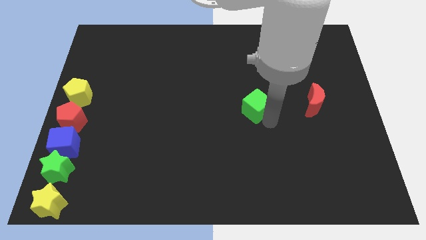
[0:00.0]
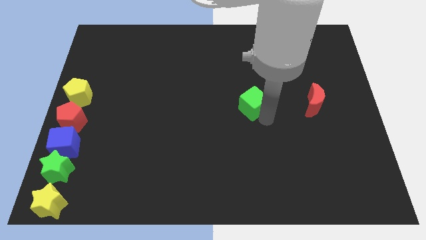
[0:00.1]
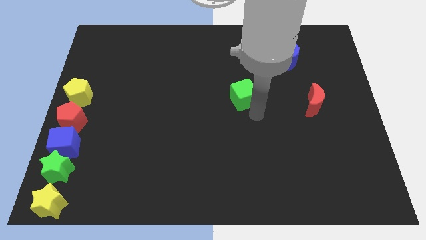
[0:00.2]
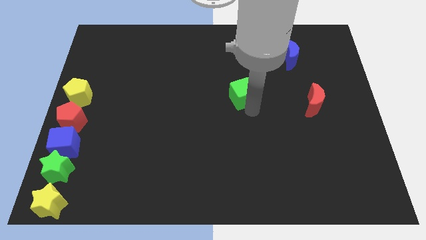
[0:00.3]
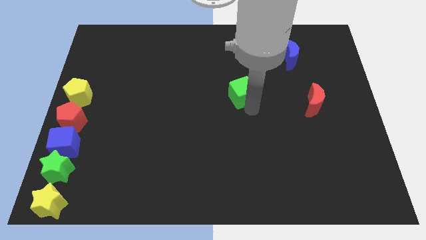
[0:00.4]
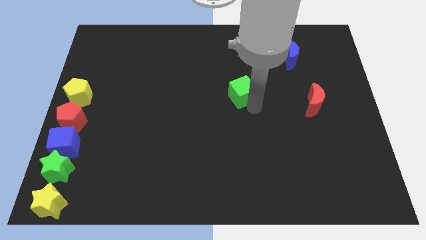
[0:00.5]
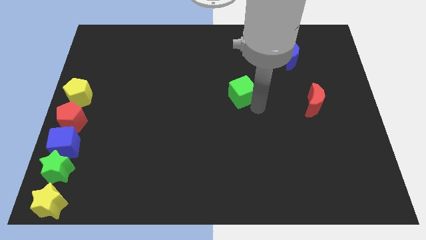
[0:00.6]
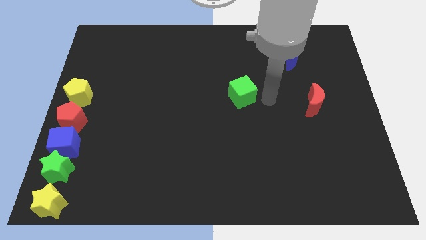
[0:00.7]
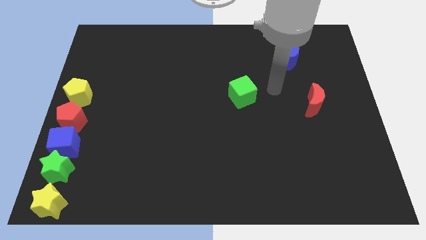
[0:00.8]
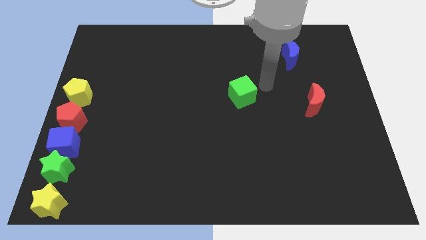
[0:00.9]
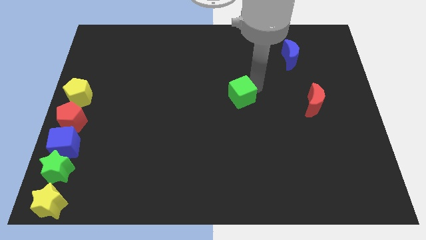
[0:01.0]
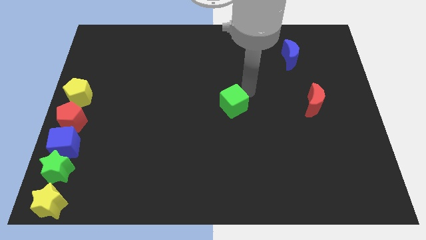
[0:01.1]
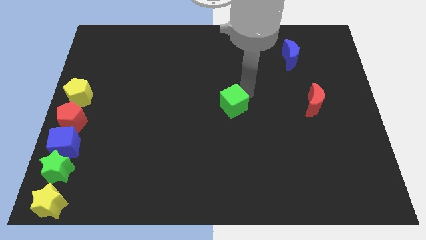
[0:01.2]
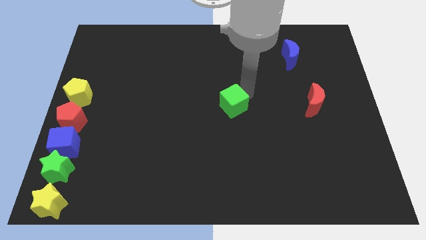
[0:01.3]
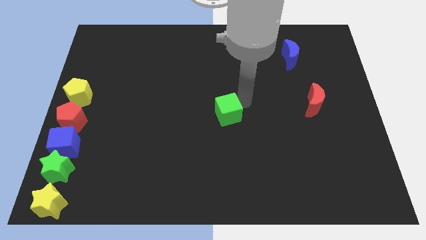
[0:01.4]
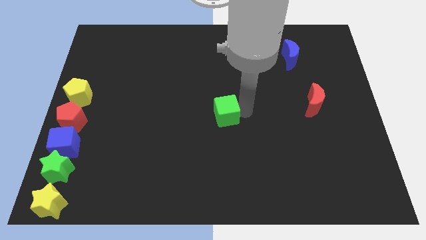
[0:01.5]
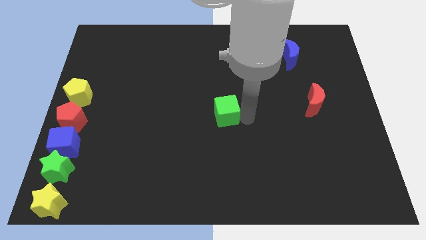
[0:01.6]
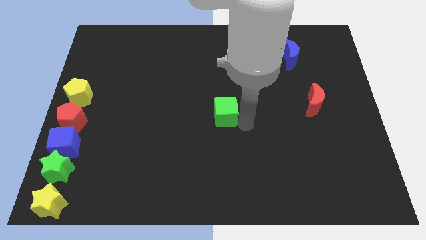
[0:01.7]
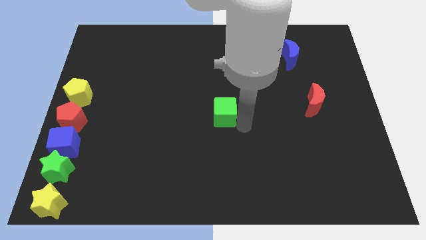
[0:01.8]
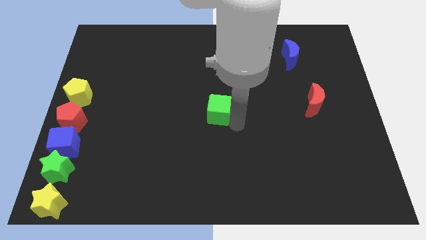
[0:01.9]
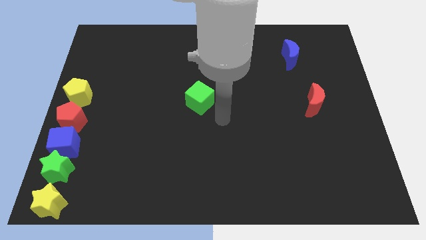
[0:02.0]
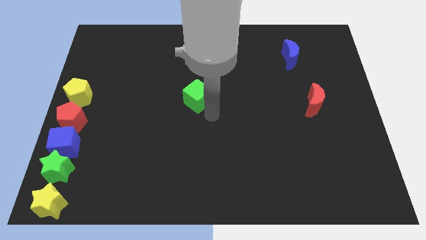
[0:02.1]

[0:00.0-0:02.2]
slide green cube to the center

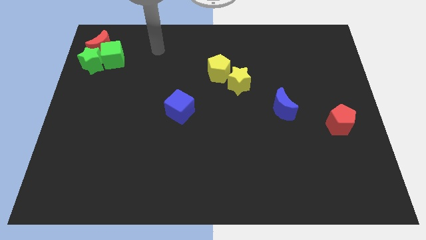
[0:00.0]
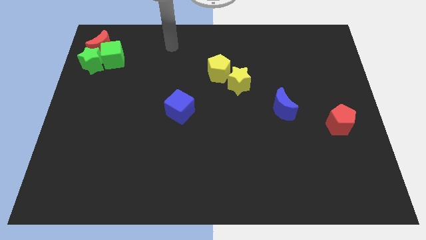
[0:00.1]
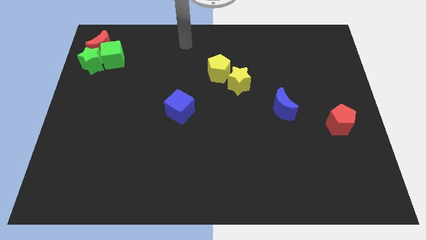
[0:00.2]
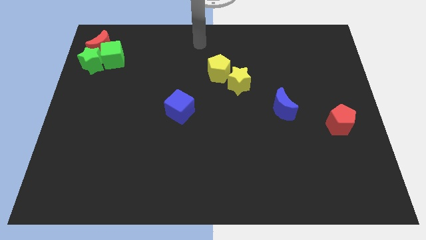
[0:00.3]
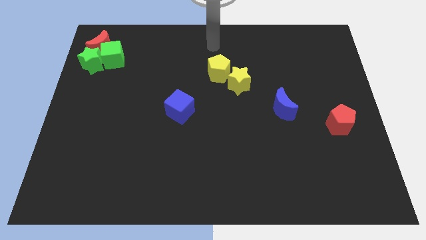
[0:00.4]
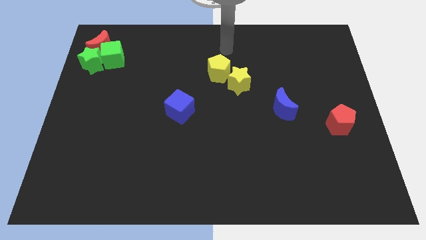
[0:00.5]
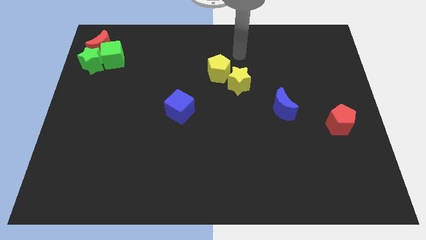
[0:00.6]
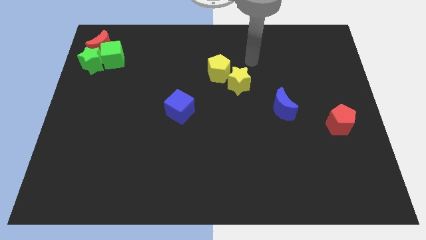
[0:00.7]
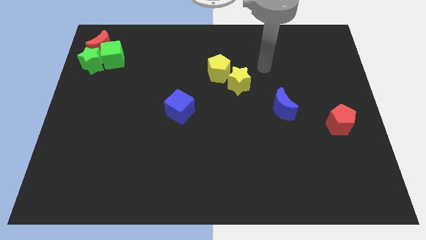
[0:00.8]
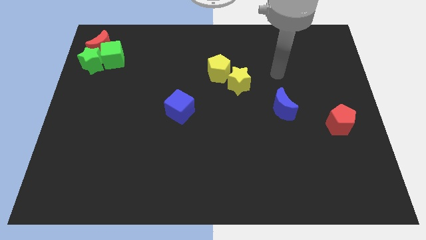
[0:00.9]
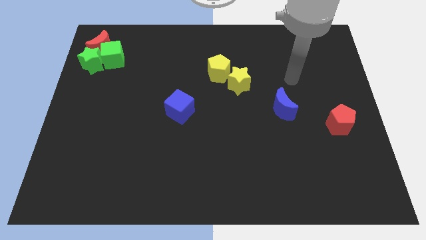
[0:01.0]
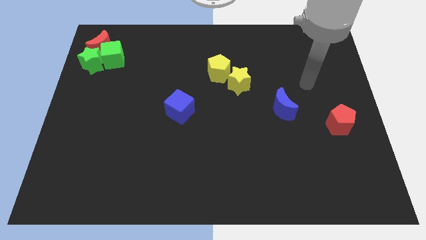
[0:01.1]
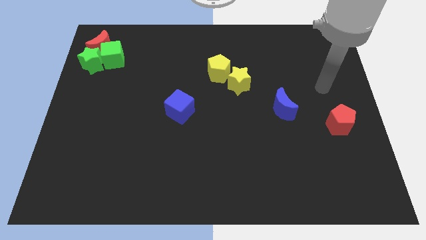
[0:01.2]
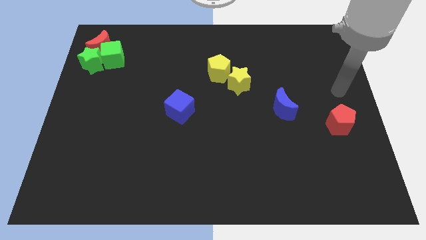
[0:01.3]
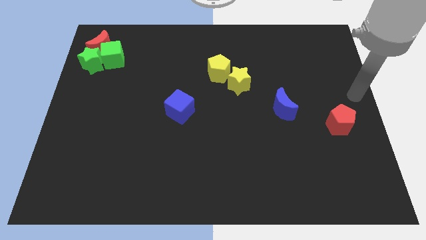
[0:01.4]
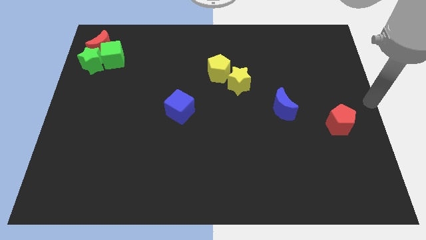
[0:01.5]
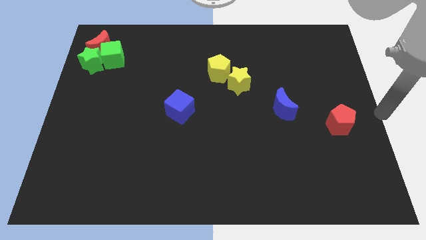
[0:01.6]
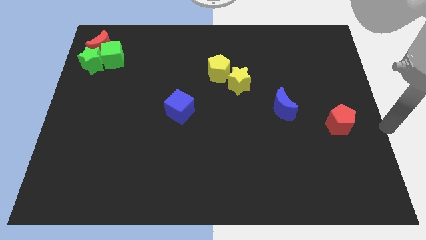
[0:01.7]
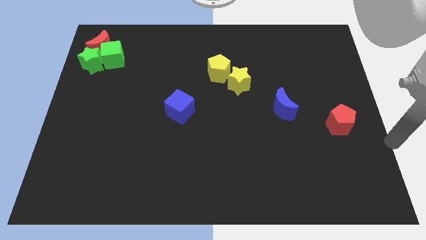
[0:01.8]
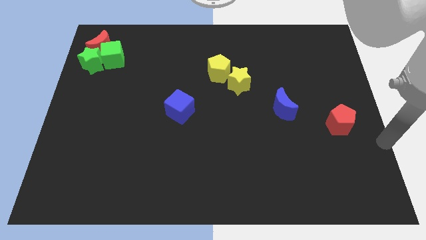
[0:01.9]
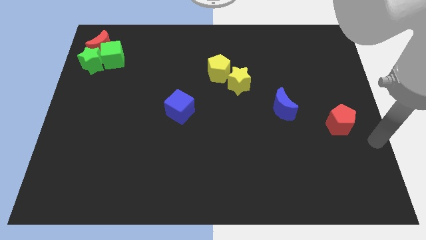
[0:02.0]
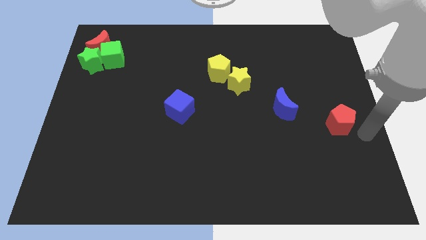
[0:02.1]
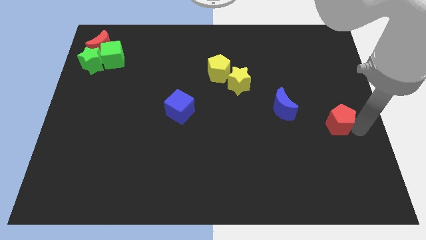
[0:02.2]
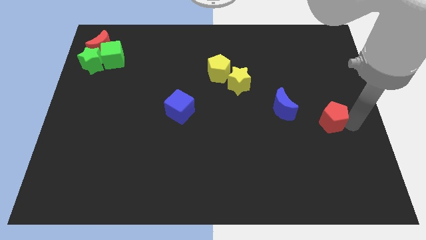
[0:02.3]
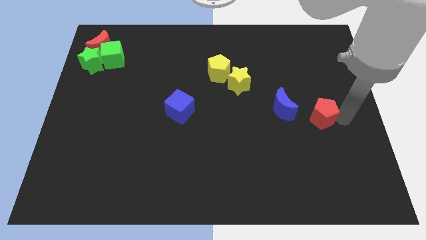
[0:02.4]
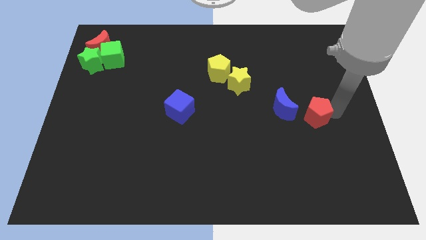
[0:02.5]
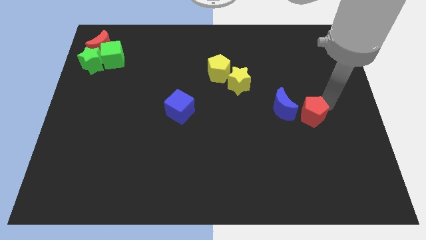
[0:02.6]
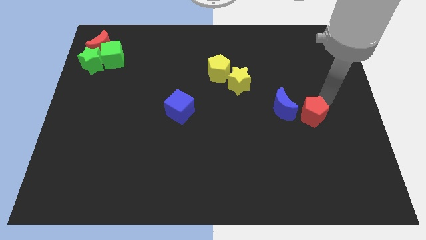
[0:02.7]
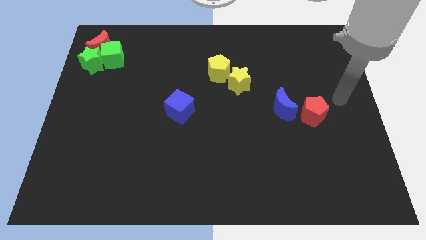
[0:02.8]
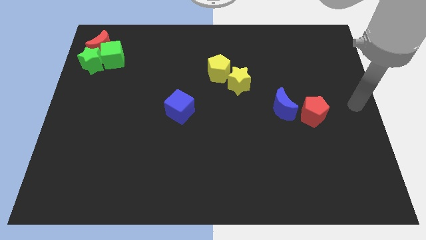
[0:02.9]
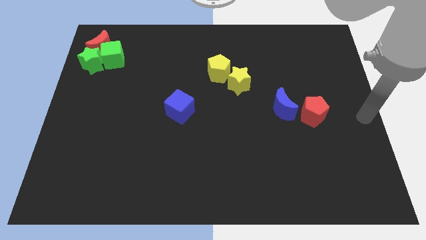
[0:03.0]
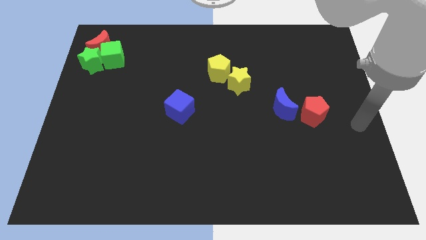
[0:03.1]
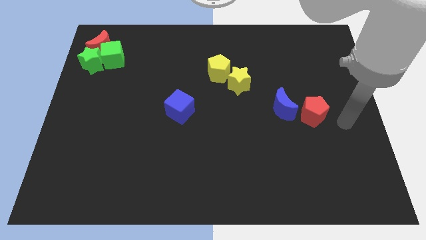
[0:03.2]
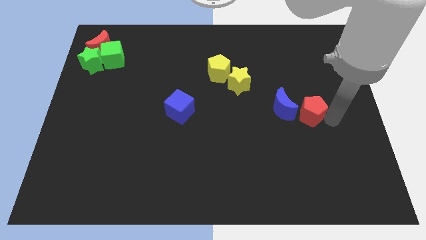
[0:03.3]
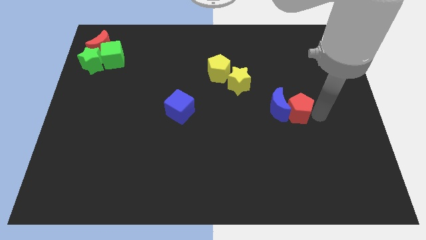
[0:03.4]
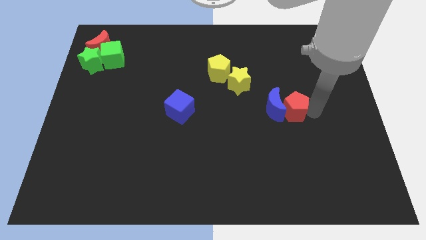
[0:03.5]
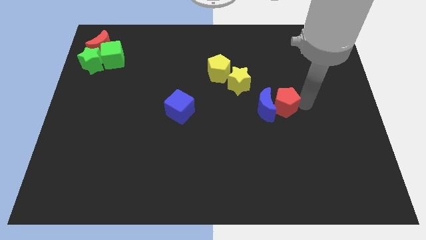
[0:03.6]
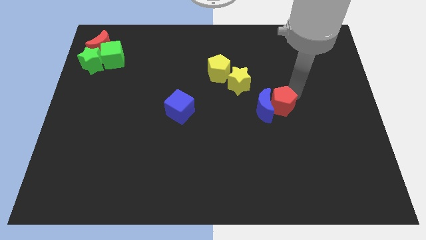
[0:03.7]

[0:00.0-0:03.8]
move the red penatgon into blue crescent to the right

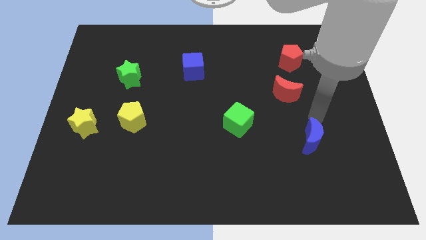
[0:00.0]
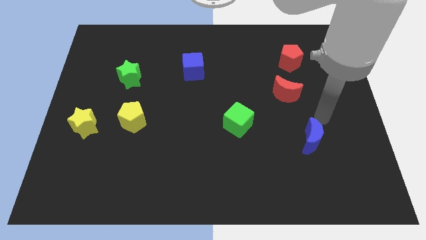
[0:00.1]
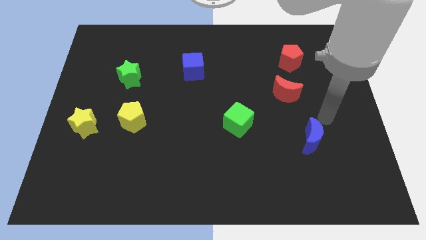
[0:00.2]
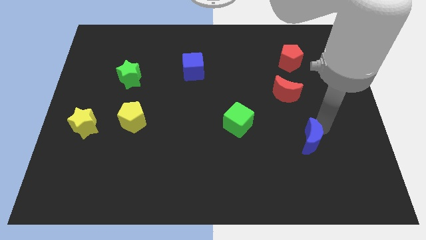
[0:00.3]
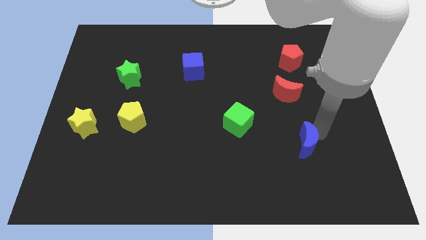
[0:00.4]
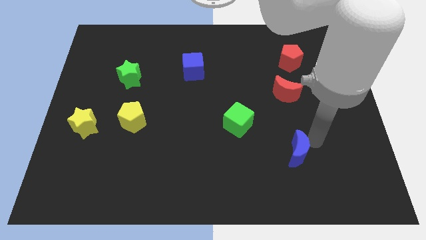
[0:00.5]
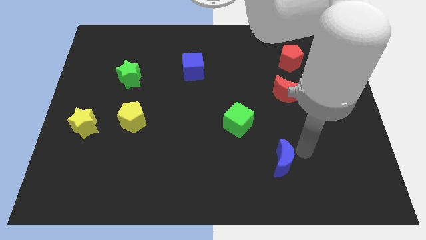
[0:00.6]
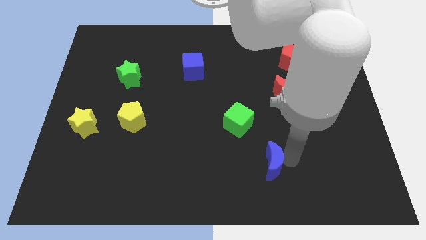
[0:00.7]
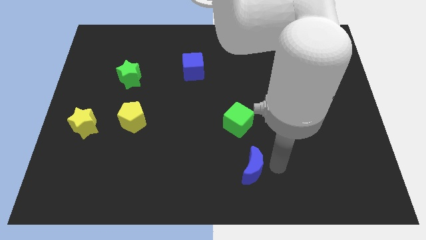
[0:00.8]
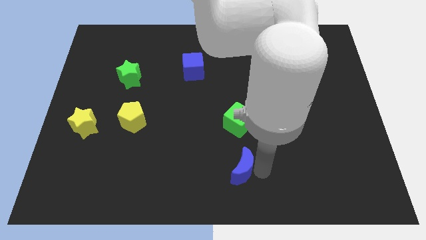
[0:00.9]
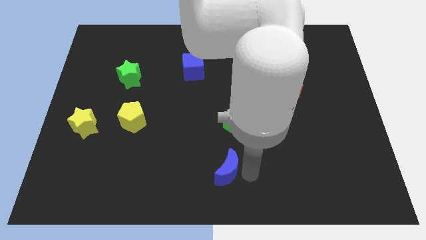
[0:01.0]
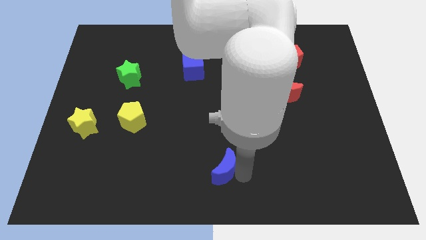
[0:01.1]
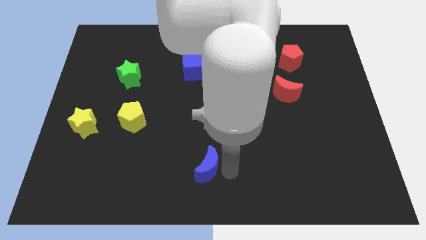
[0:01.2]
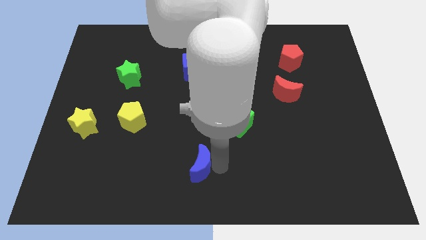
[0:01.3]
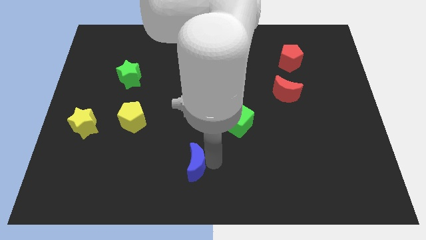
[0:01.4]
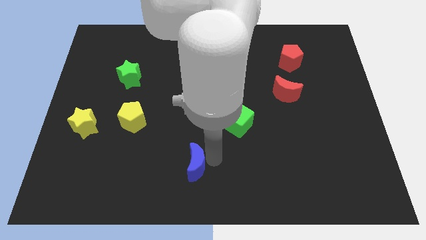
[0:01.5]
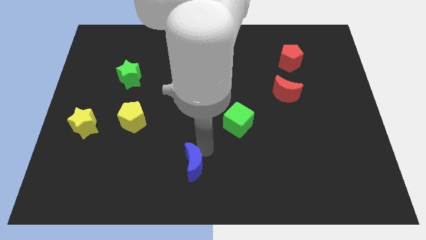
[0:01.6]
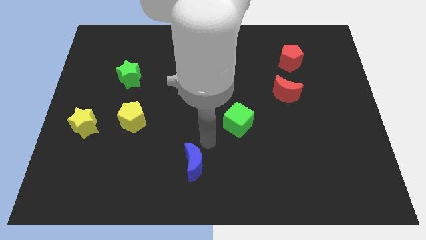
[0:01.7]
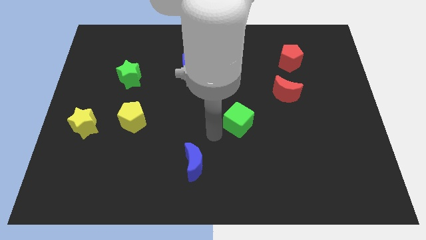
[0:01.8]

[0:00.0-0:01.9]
move the blue moon diagonally to the yellow pentagon

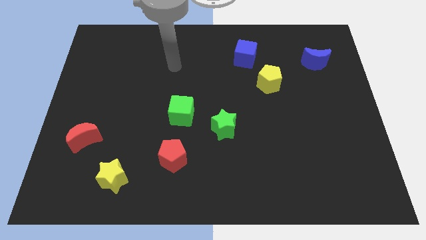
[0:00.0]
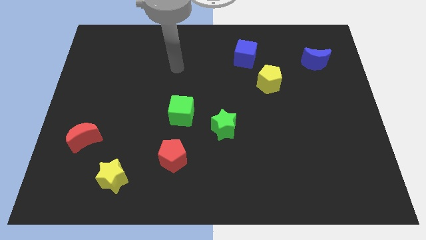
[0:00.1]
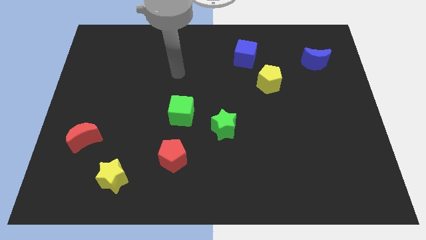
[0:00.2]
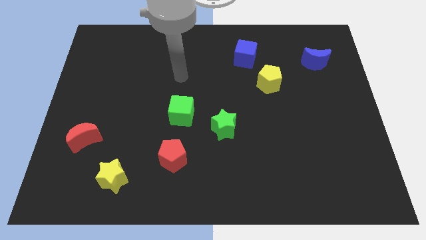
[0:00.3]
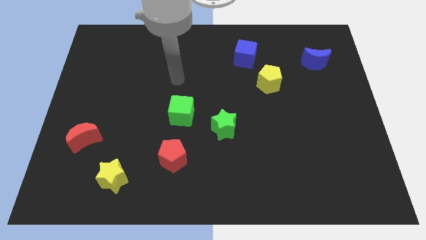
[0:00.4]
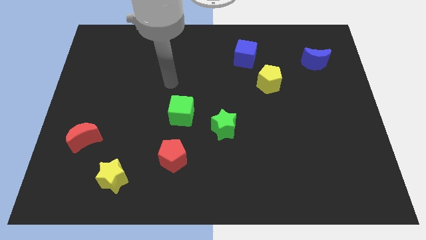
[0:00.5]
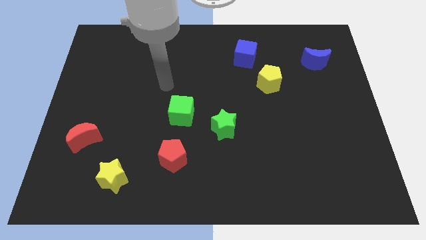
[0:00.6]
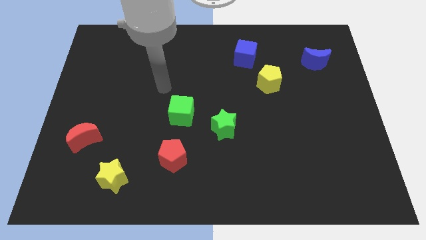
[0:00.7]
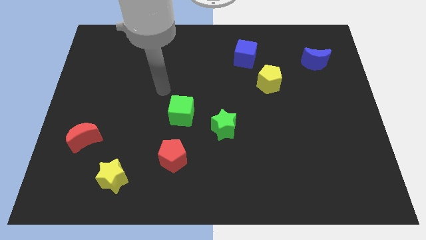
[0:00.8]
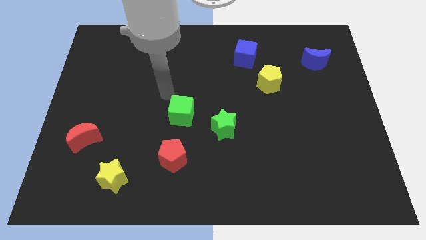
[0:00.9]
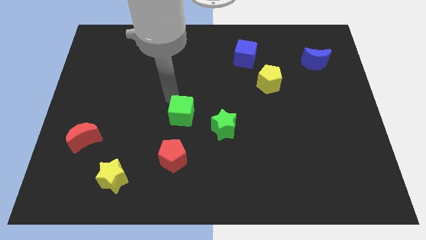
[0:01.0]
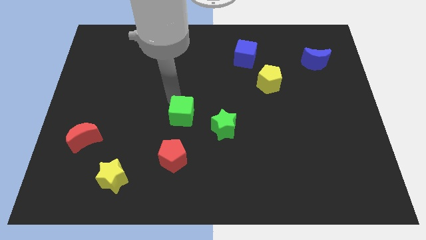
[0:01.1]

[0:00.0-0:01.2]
tap the green cube
